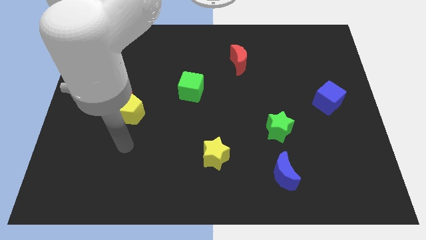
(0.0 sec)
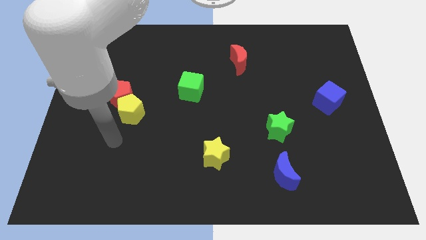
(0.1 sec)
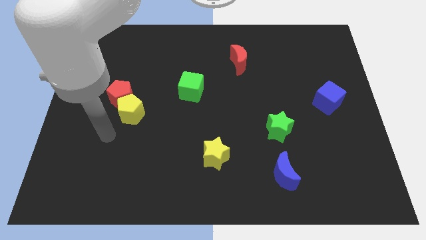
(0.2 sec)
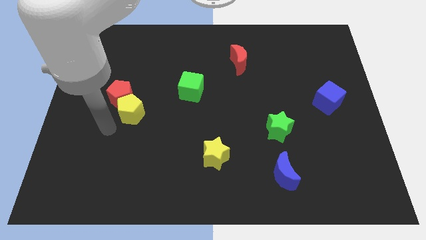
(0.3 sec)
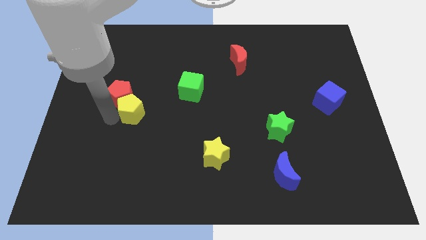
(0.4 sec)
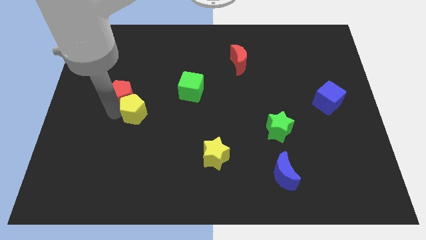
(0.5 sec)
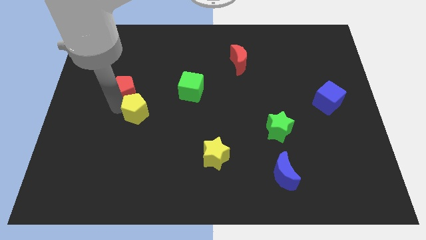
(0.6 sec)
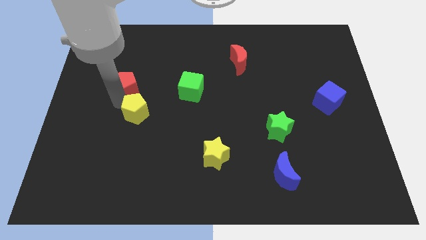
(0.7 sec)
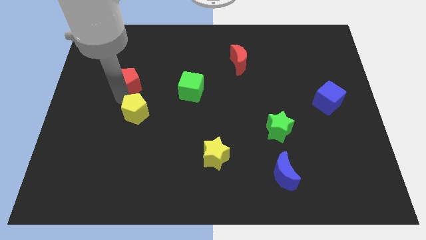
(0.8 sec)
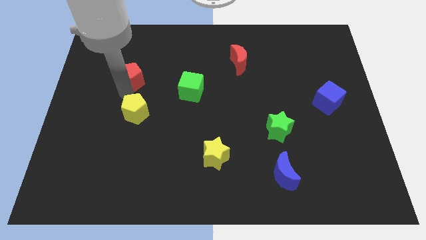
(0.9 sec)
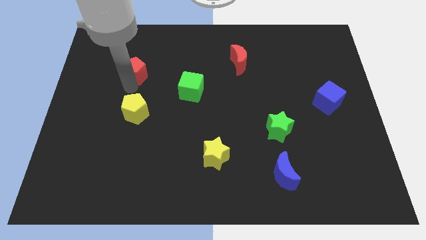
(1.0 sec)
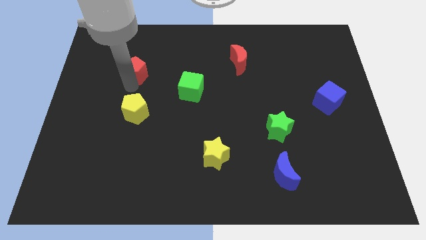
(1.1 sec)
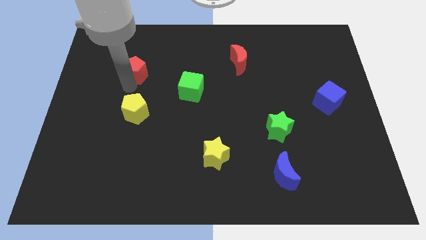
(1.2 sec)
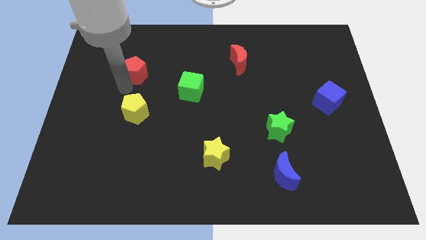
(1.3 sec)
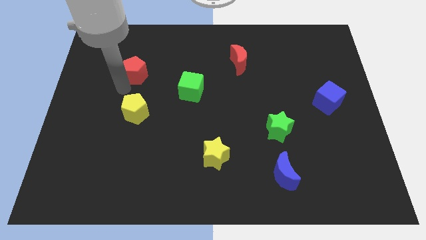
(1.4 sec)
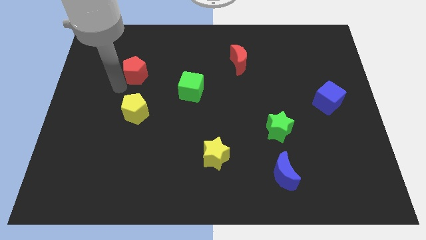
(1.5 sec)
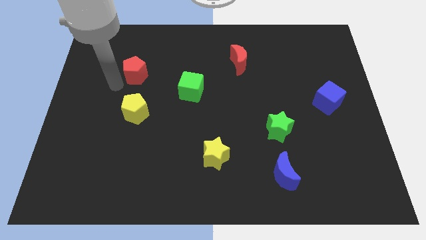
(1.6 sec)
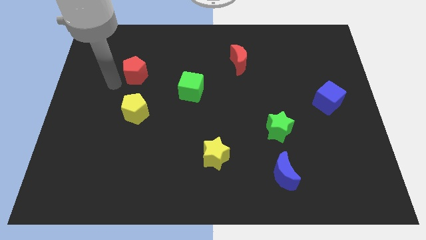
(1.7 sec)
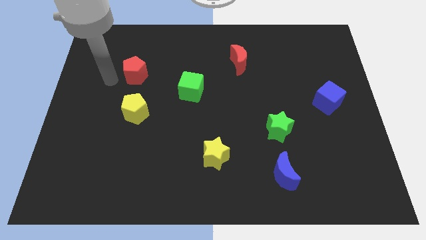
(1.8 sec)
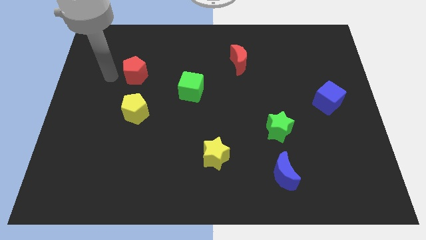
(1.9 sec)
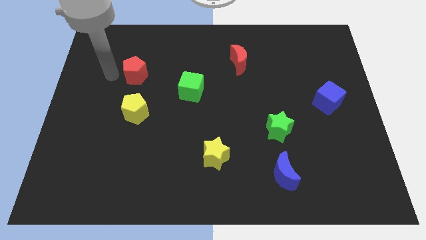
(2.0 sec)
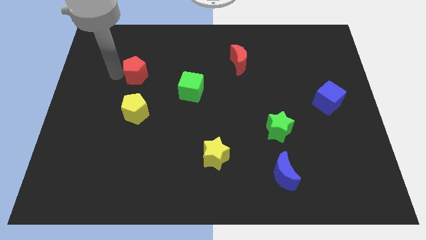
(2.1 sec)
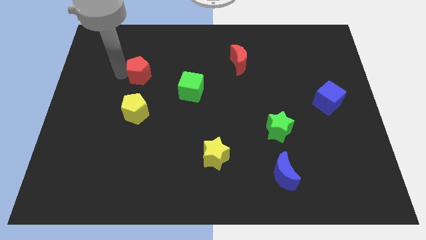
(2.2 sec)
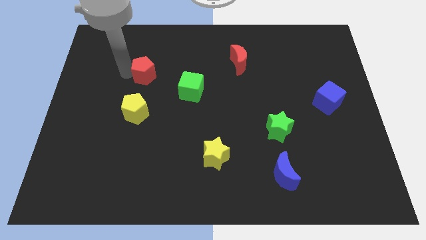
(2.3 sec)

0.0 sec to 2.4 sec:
slightly move the red pentagon to the right

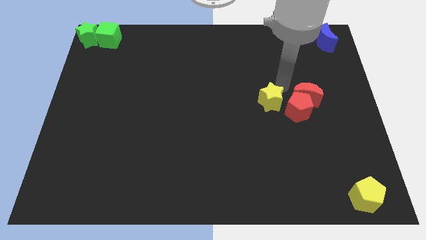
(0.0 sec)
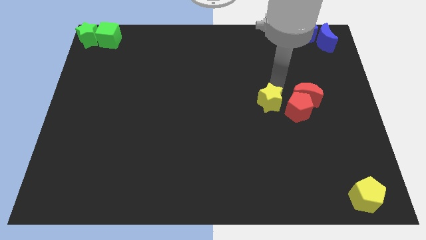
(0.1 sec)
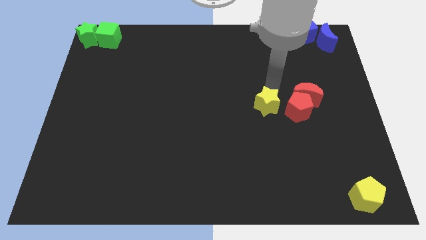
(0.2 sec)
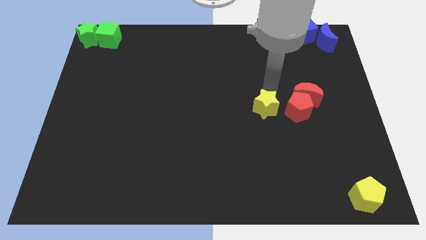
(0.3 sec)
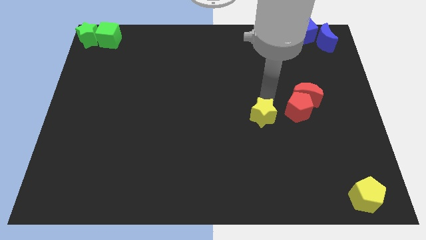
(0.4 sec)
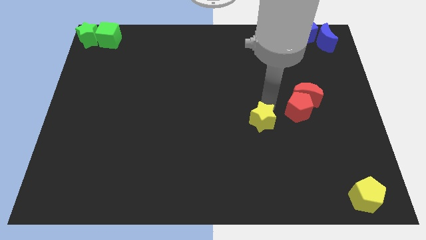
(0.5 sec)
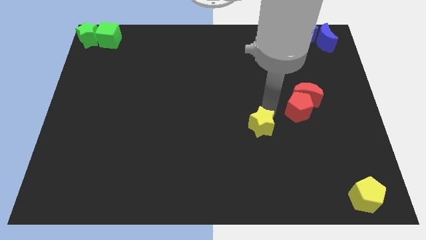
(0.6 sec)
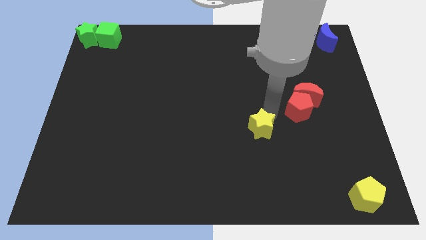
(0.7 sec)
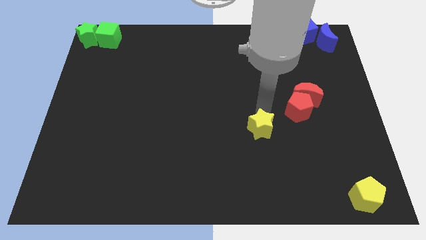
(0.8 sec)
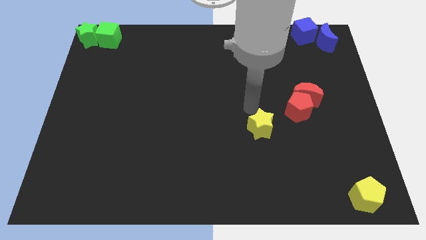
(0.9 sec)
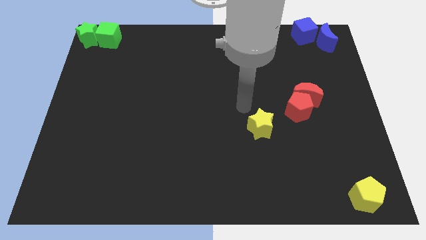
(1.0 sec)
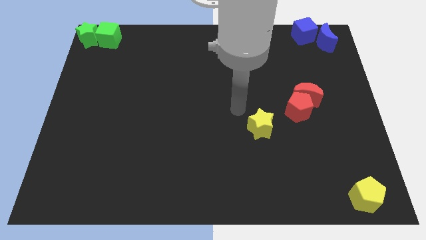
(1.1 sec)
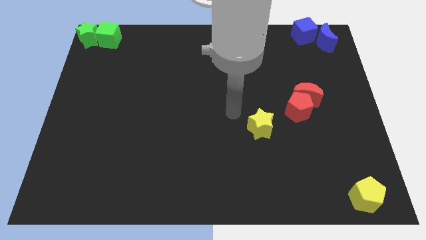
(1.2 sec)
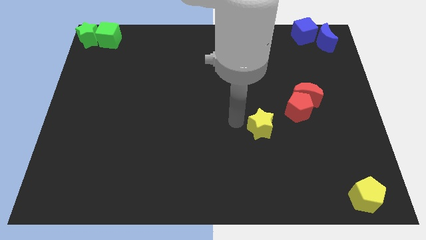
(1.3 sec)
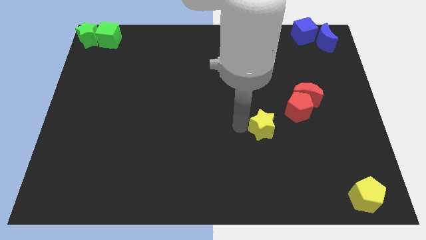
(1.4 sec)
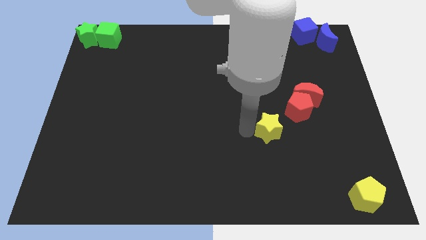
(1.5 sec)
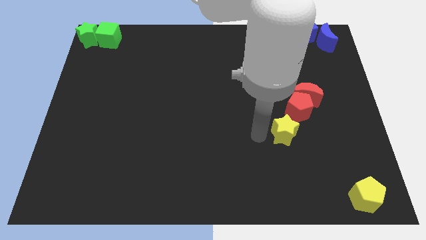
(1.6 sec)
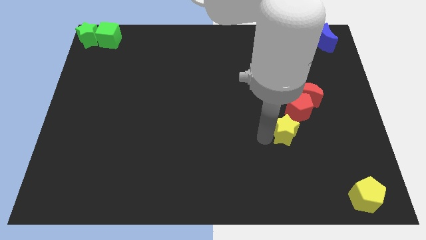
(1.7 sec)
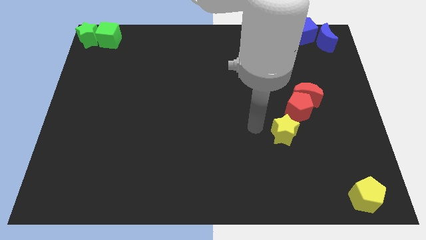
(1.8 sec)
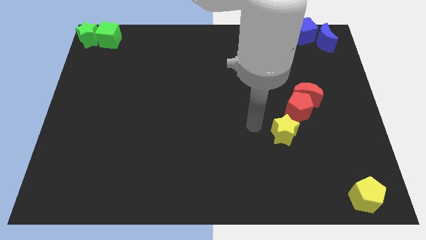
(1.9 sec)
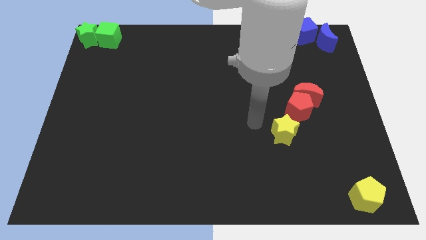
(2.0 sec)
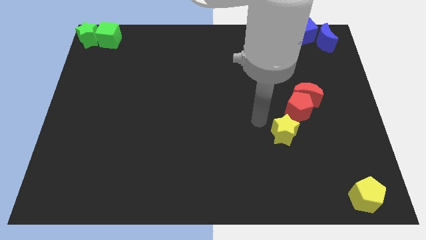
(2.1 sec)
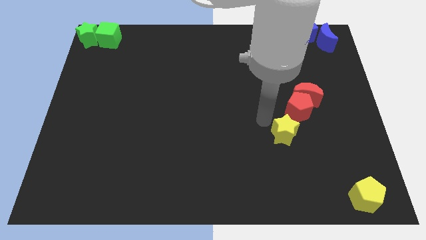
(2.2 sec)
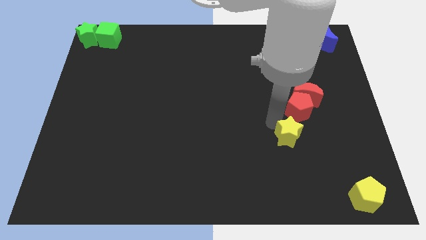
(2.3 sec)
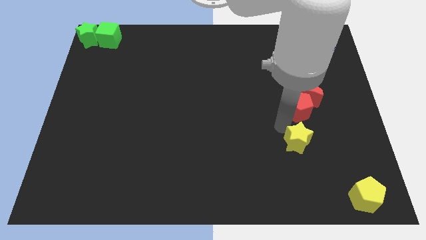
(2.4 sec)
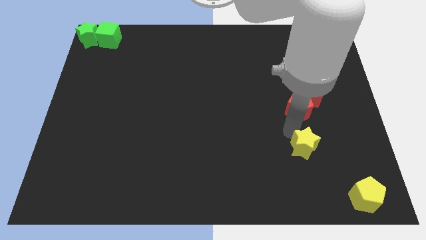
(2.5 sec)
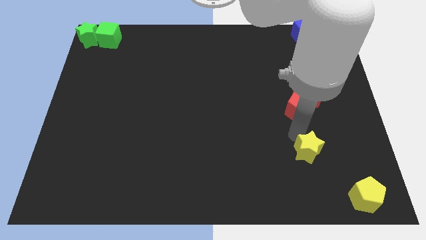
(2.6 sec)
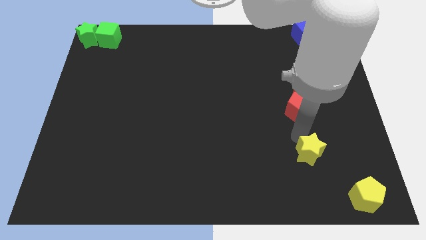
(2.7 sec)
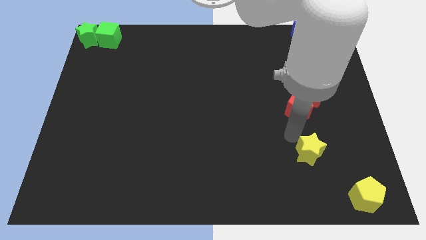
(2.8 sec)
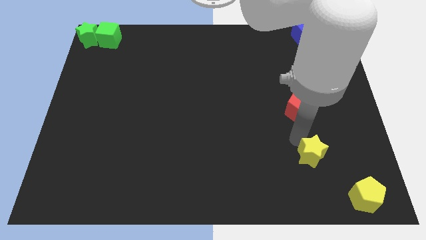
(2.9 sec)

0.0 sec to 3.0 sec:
push the yellow star towards yellow pentagon

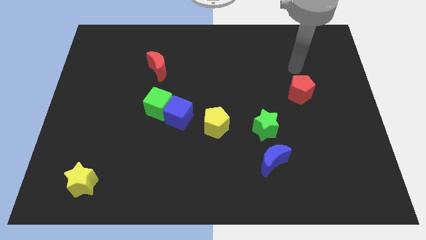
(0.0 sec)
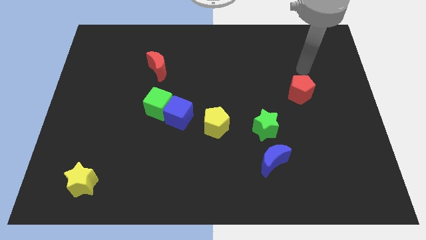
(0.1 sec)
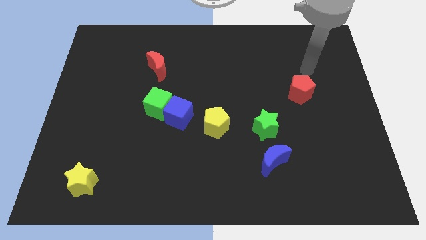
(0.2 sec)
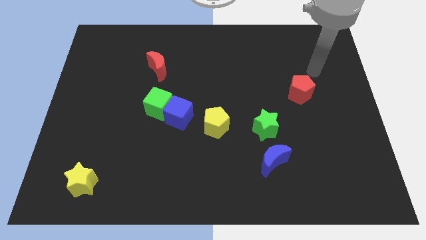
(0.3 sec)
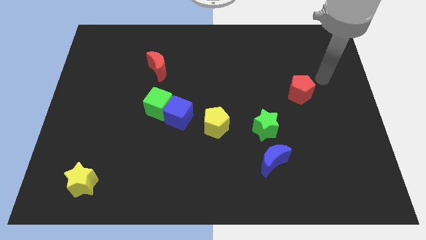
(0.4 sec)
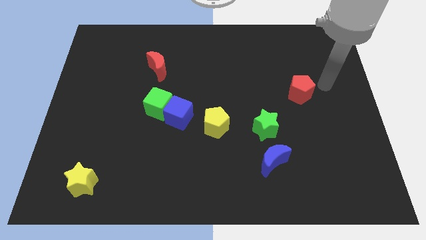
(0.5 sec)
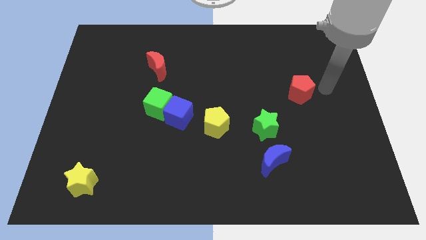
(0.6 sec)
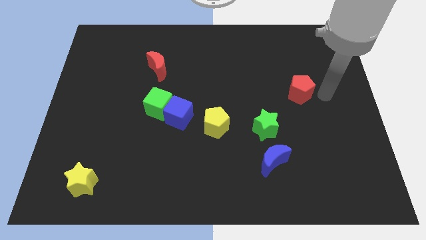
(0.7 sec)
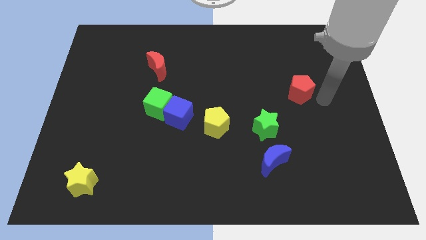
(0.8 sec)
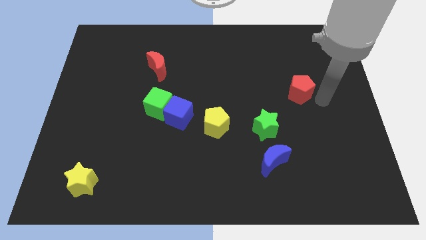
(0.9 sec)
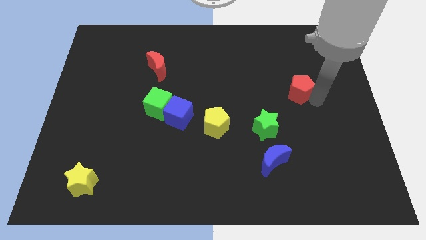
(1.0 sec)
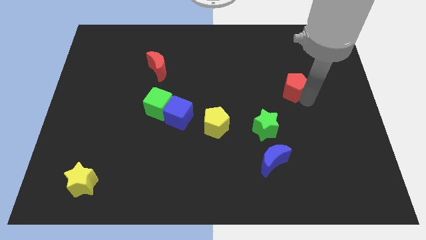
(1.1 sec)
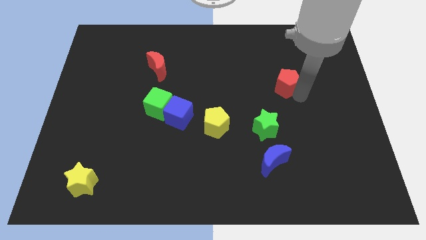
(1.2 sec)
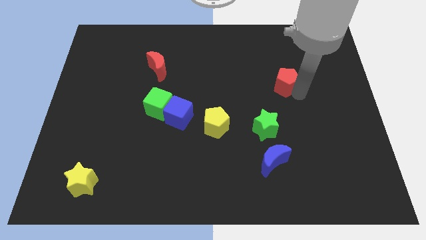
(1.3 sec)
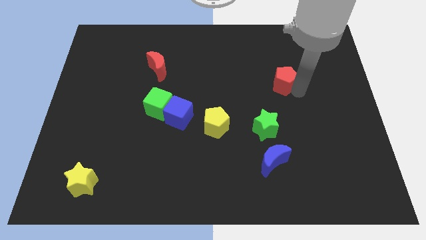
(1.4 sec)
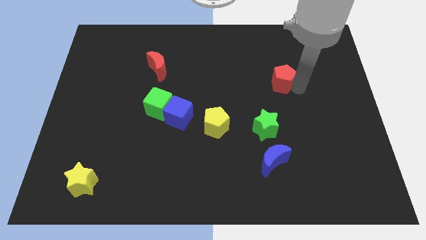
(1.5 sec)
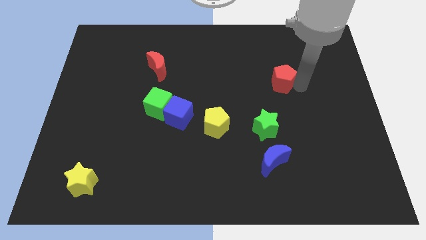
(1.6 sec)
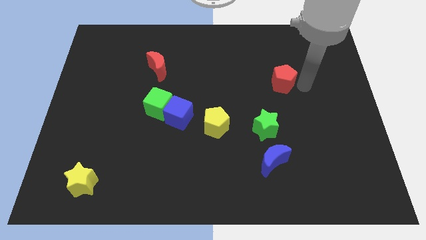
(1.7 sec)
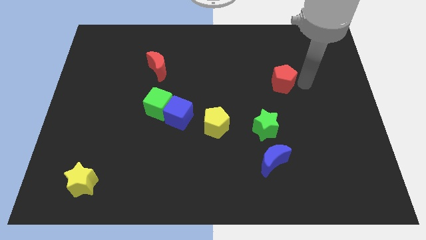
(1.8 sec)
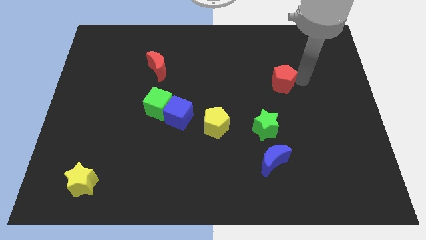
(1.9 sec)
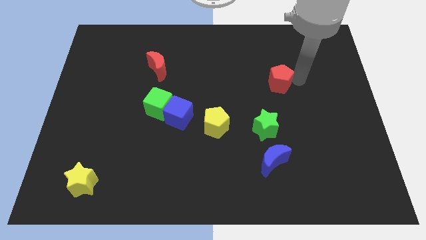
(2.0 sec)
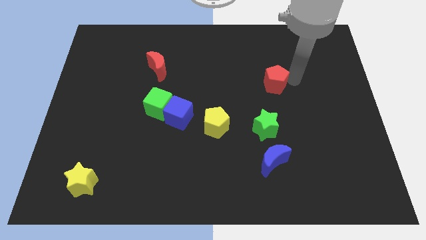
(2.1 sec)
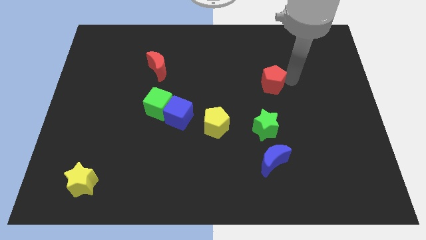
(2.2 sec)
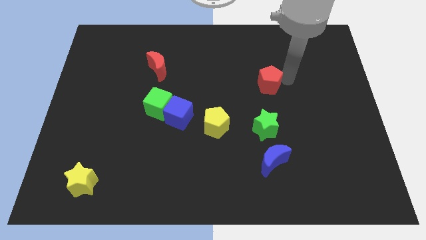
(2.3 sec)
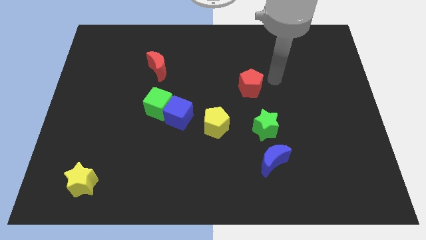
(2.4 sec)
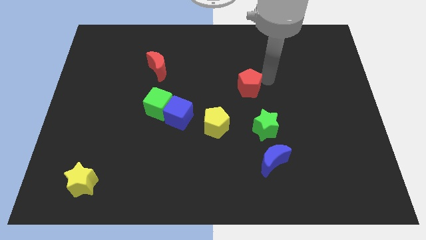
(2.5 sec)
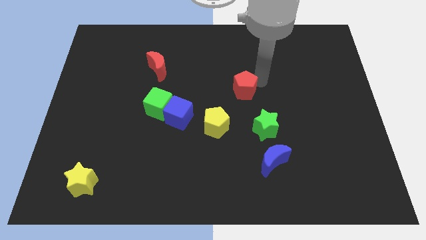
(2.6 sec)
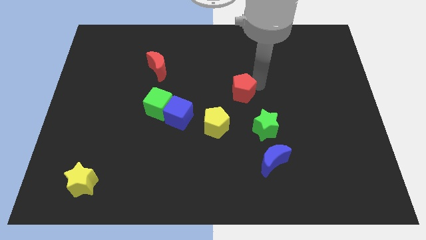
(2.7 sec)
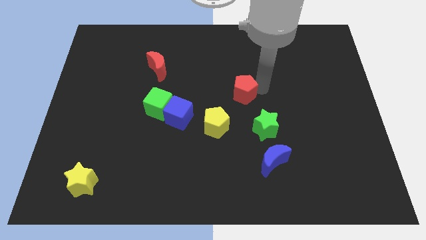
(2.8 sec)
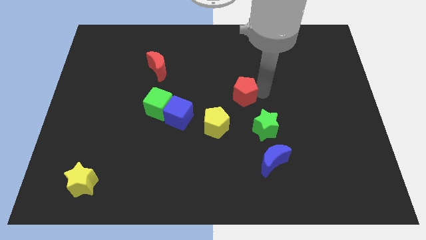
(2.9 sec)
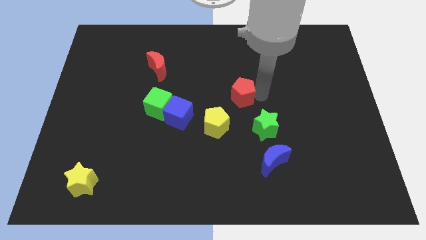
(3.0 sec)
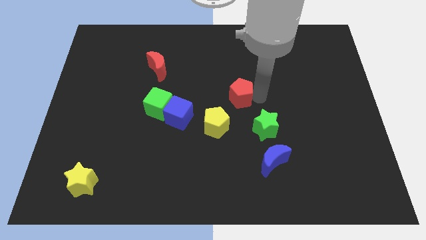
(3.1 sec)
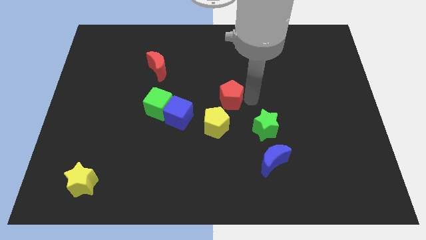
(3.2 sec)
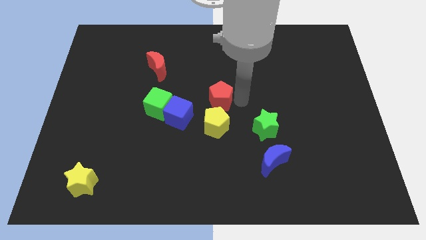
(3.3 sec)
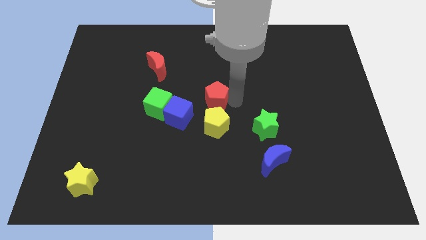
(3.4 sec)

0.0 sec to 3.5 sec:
place the red pentagon above the yellow pentagon

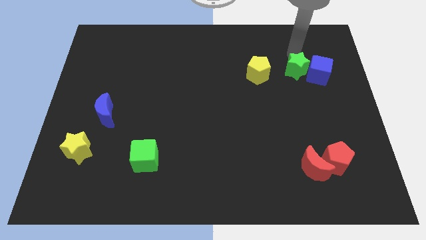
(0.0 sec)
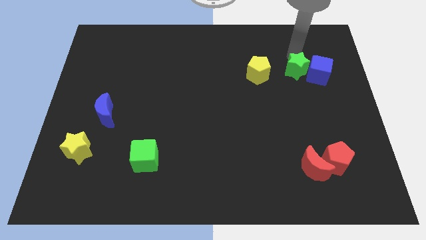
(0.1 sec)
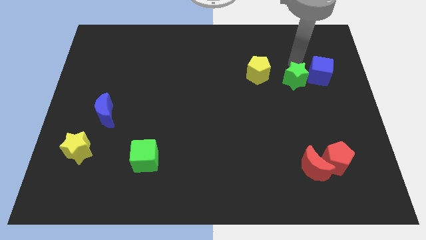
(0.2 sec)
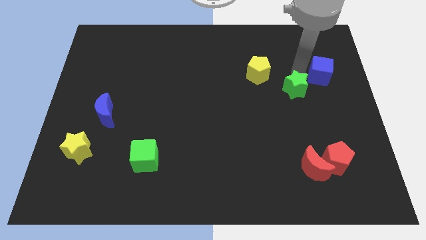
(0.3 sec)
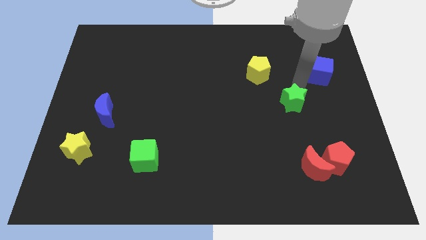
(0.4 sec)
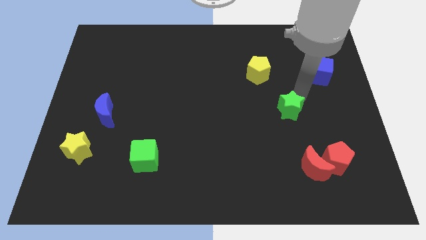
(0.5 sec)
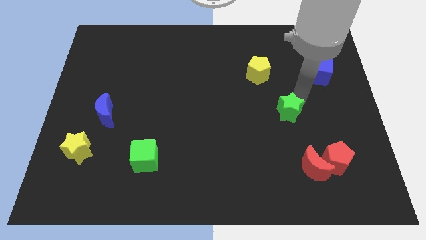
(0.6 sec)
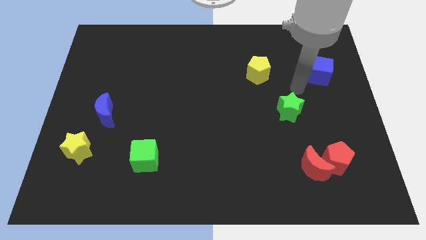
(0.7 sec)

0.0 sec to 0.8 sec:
move the green star downward
